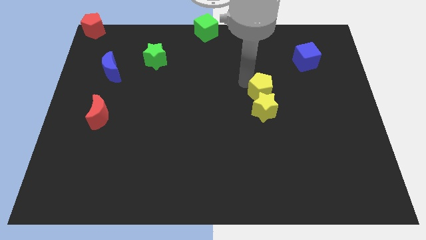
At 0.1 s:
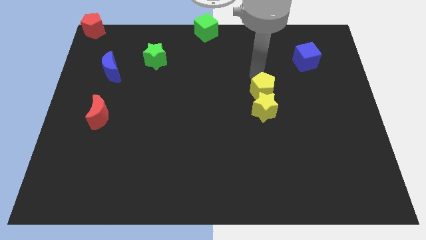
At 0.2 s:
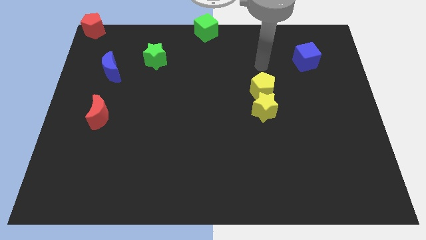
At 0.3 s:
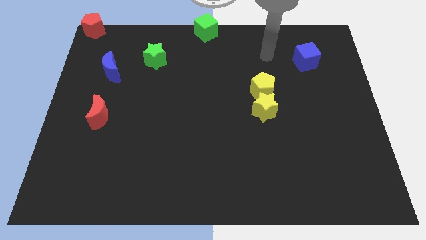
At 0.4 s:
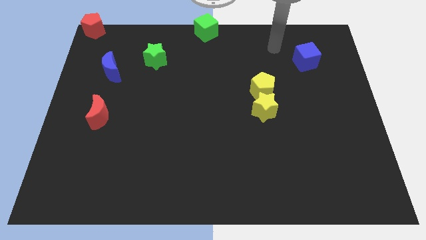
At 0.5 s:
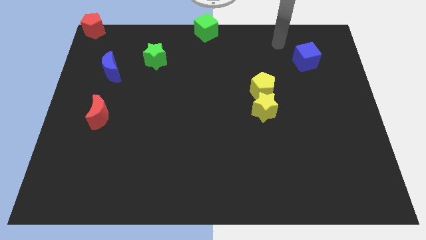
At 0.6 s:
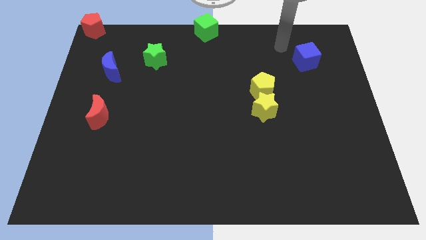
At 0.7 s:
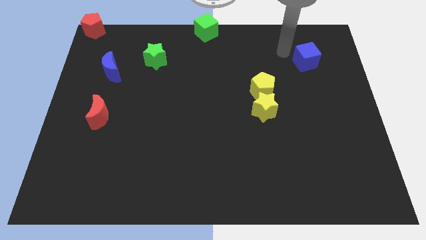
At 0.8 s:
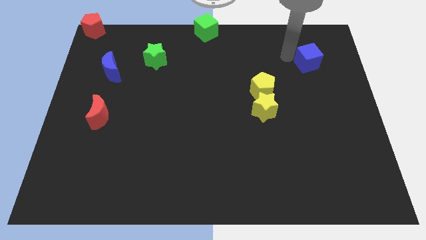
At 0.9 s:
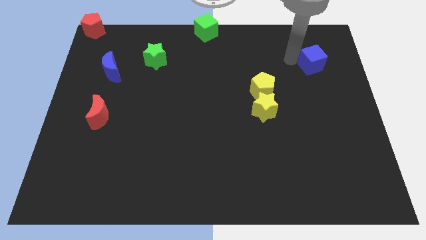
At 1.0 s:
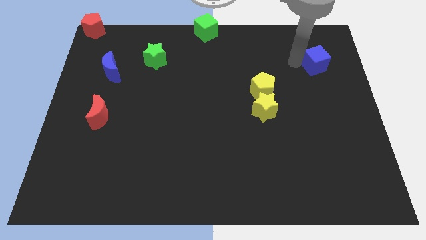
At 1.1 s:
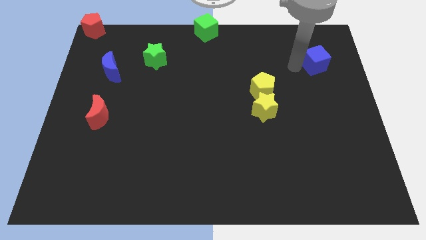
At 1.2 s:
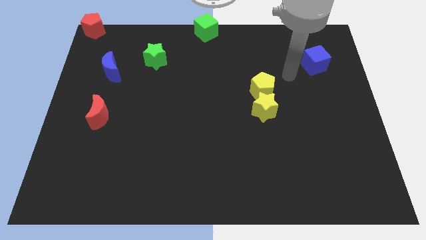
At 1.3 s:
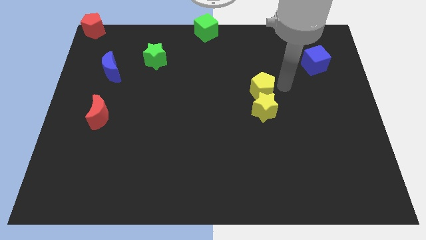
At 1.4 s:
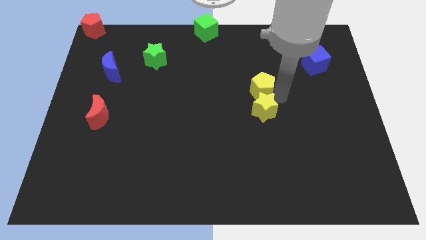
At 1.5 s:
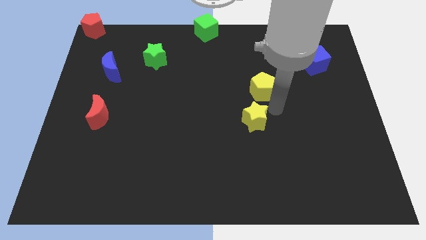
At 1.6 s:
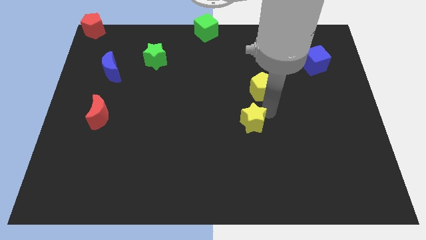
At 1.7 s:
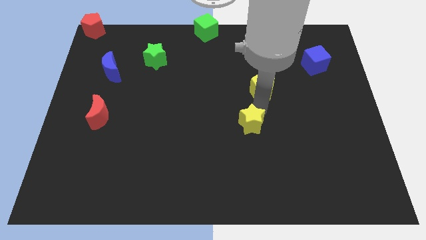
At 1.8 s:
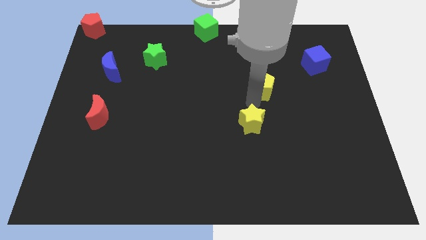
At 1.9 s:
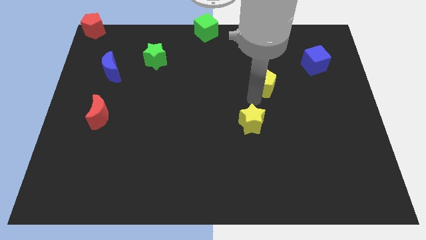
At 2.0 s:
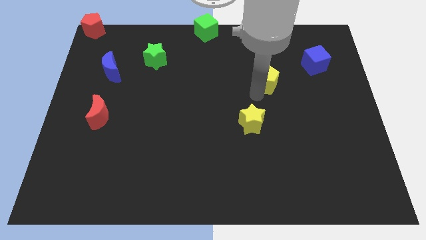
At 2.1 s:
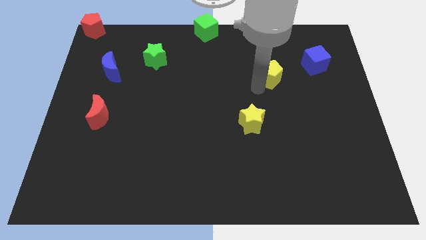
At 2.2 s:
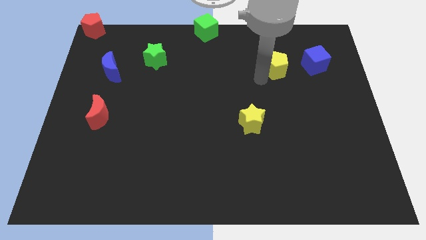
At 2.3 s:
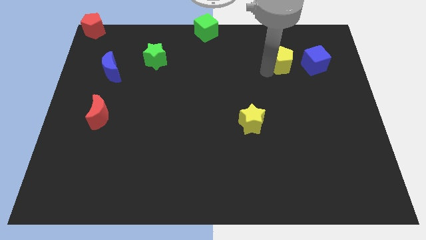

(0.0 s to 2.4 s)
separate the yellow pentagon and the yellow star

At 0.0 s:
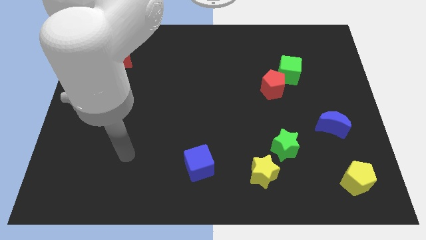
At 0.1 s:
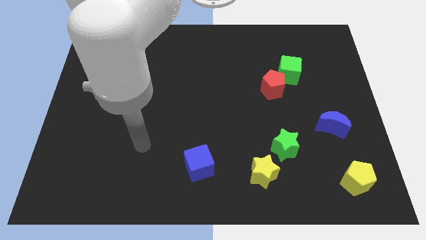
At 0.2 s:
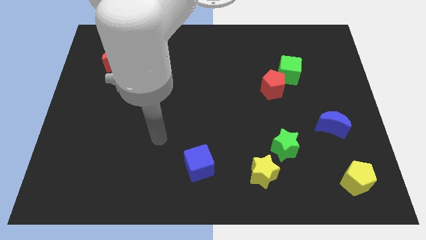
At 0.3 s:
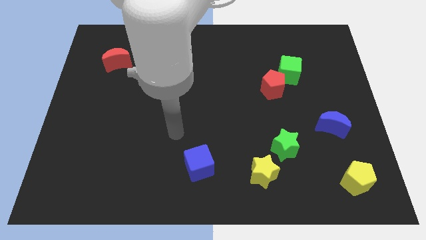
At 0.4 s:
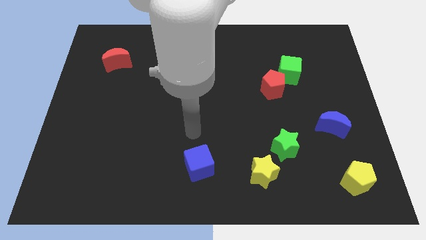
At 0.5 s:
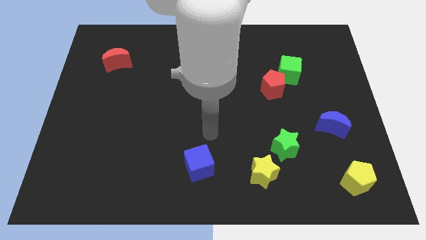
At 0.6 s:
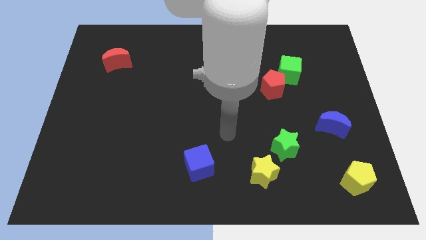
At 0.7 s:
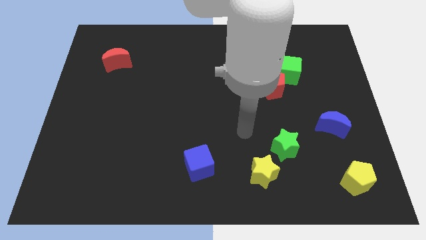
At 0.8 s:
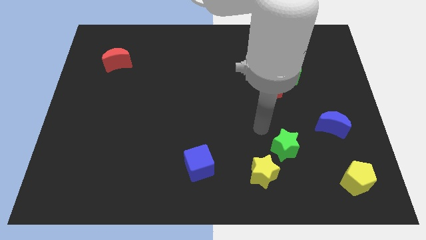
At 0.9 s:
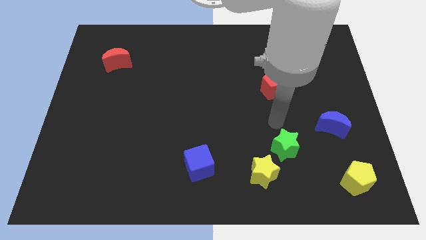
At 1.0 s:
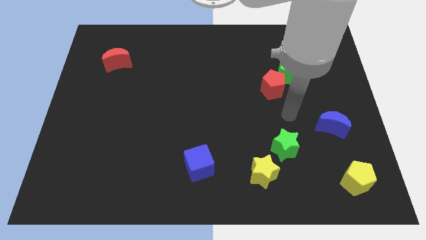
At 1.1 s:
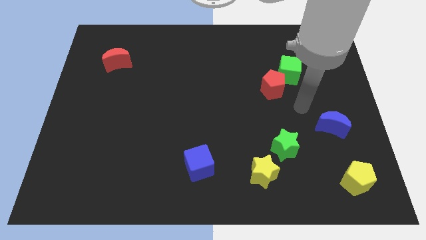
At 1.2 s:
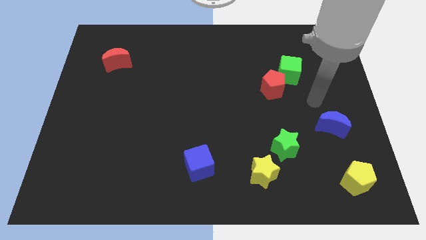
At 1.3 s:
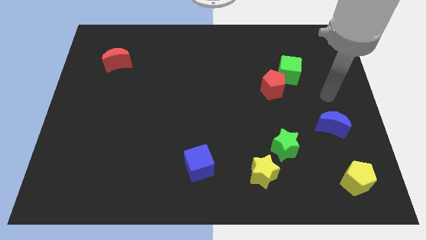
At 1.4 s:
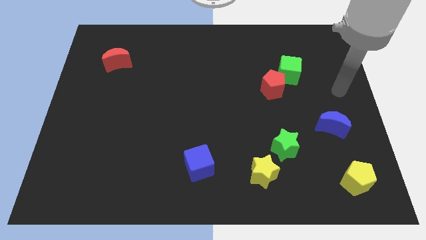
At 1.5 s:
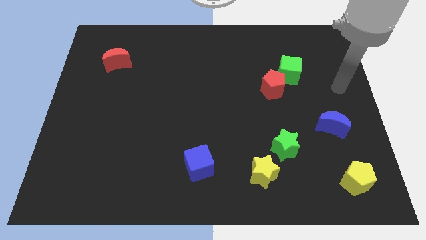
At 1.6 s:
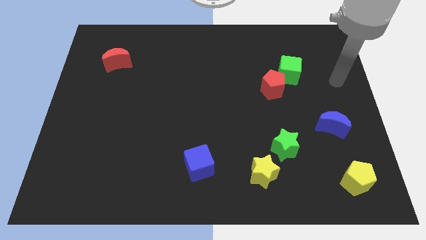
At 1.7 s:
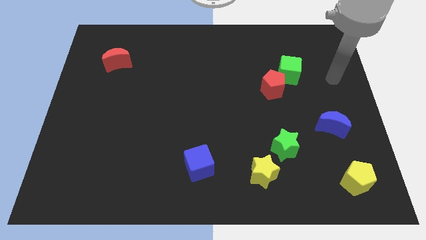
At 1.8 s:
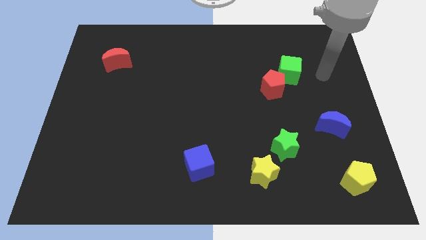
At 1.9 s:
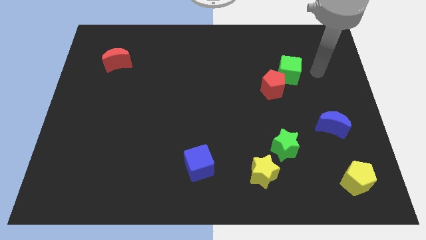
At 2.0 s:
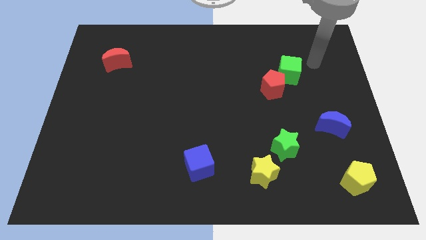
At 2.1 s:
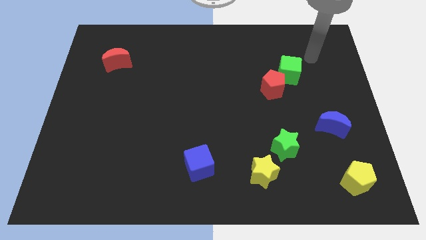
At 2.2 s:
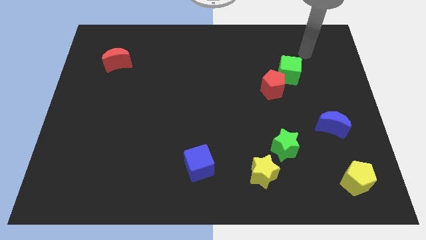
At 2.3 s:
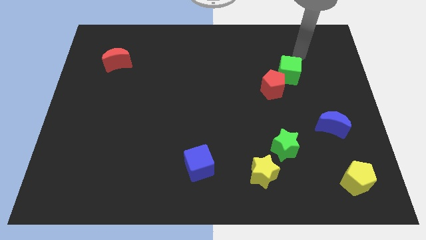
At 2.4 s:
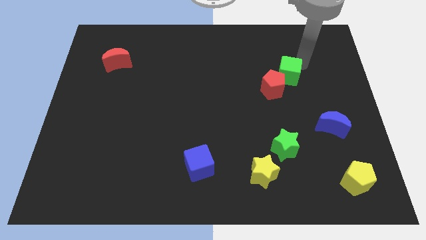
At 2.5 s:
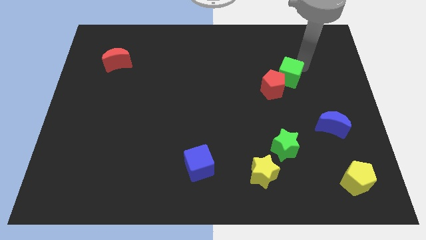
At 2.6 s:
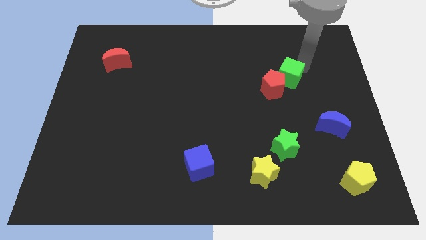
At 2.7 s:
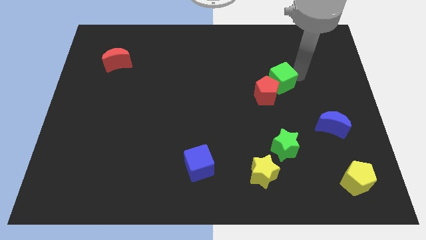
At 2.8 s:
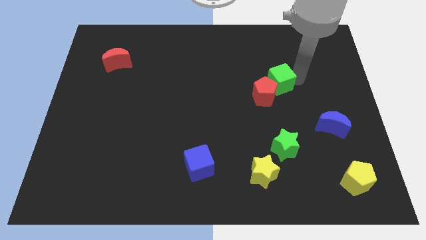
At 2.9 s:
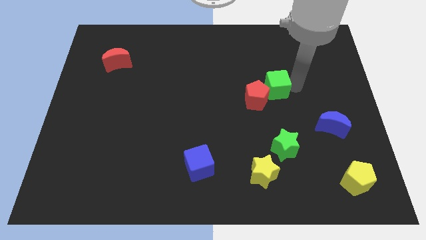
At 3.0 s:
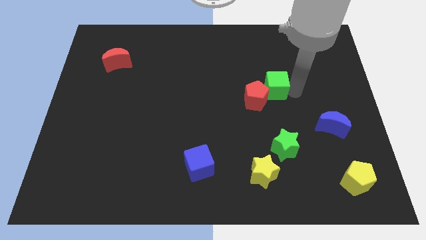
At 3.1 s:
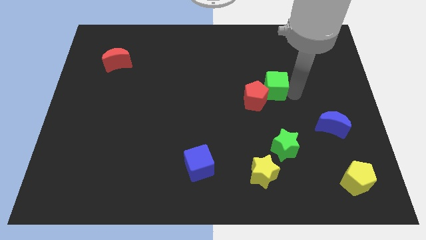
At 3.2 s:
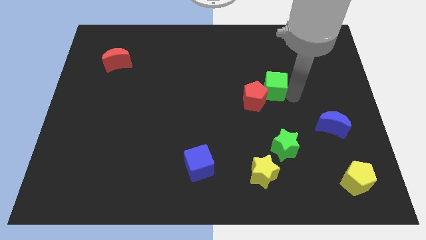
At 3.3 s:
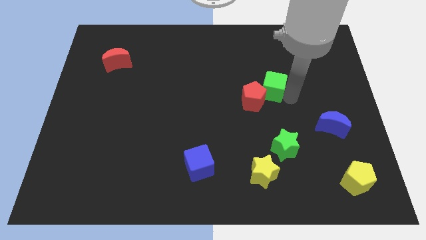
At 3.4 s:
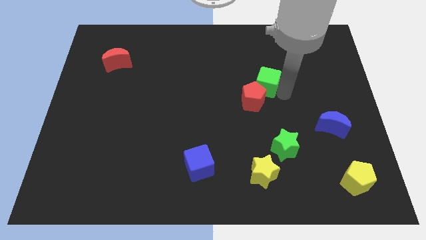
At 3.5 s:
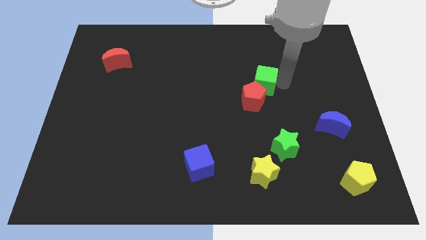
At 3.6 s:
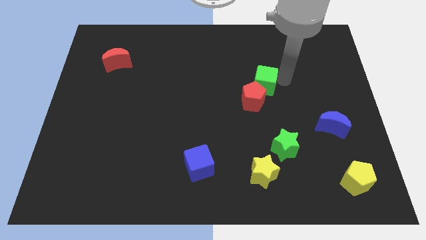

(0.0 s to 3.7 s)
push the green cube into the red pentagon

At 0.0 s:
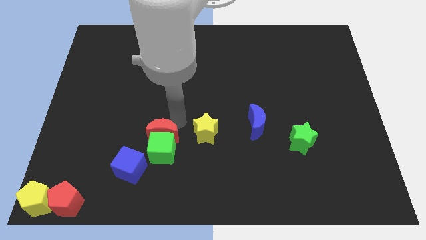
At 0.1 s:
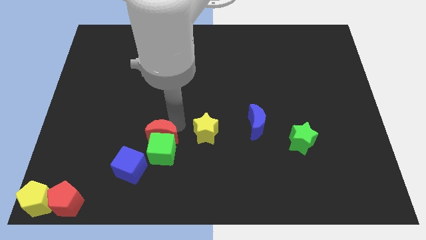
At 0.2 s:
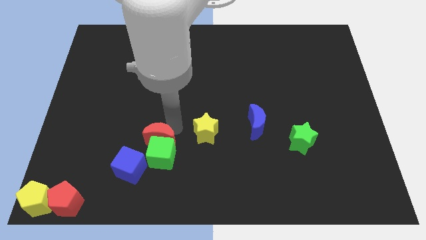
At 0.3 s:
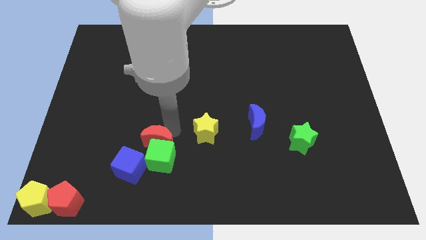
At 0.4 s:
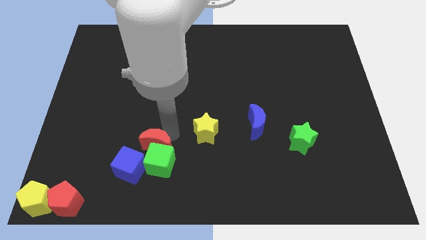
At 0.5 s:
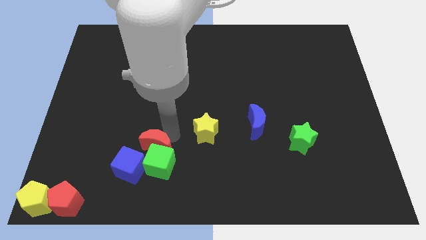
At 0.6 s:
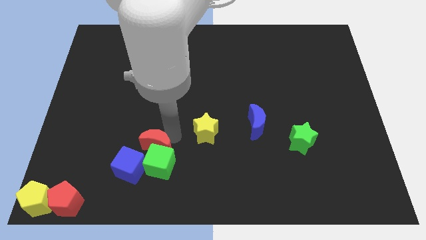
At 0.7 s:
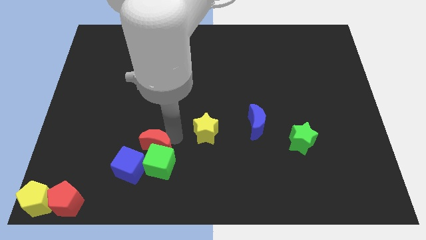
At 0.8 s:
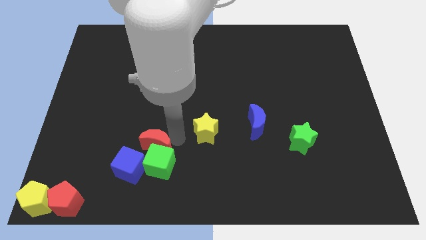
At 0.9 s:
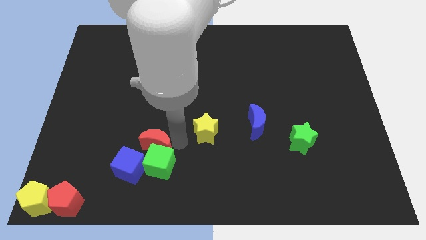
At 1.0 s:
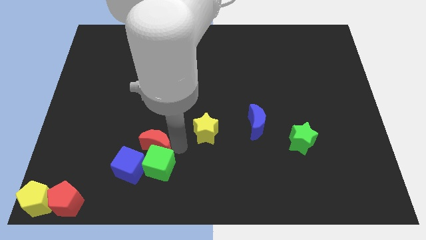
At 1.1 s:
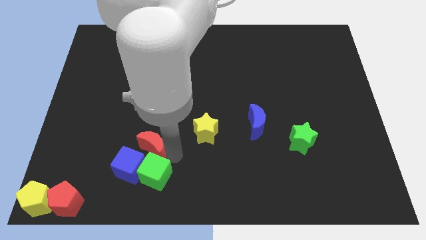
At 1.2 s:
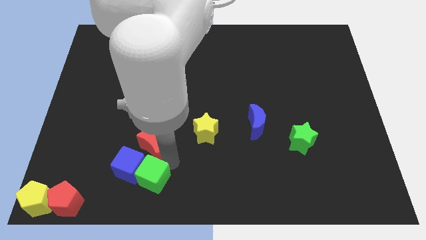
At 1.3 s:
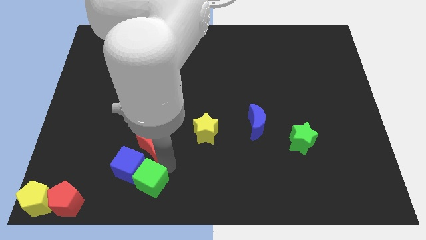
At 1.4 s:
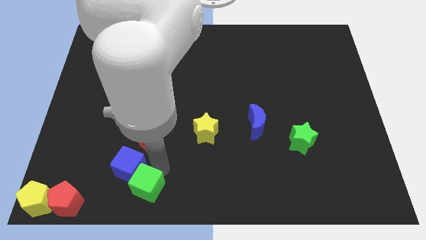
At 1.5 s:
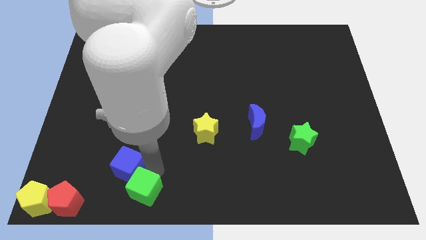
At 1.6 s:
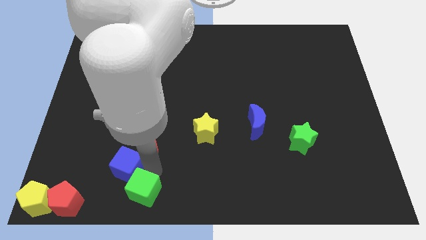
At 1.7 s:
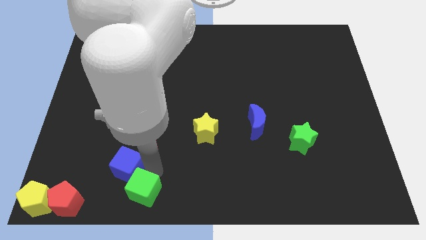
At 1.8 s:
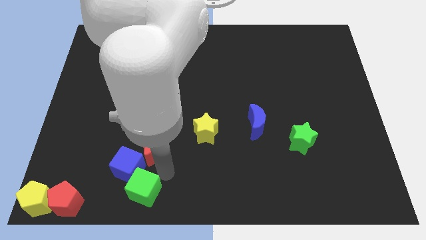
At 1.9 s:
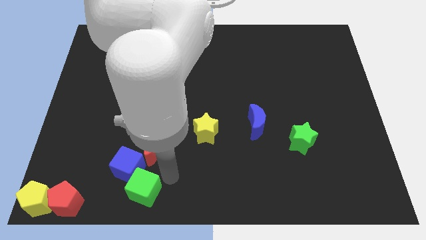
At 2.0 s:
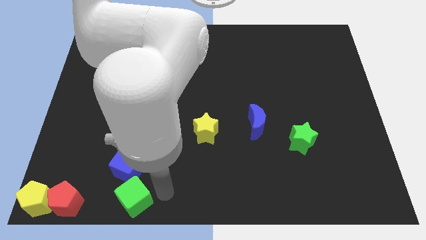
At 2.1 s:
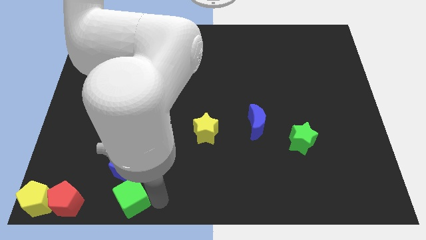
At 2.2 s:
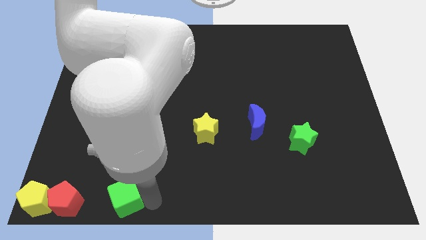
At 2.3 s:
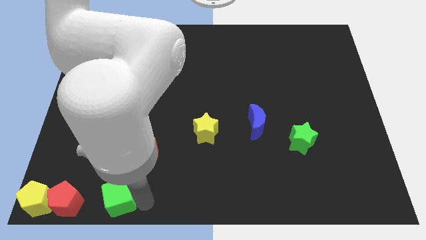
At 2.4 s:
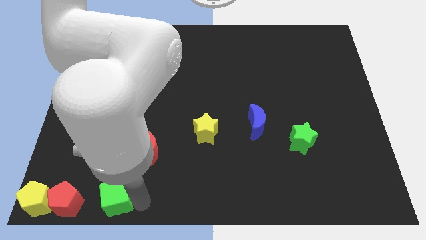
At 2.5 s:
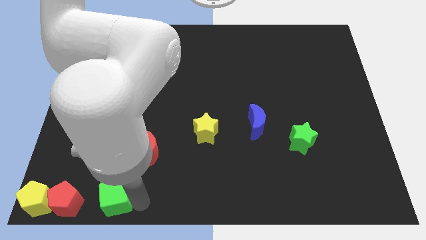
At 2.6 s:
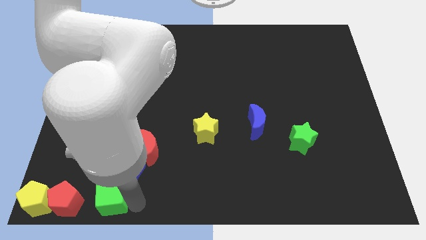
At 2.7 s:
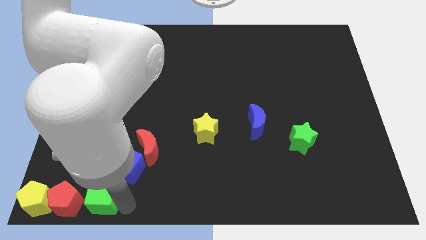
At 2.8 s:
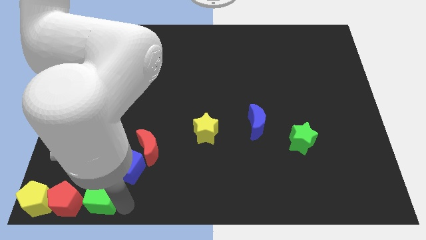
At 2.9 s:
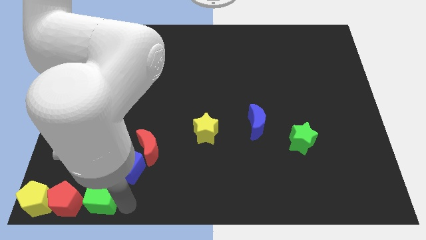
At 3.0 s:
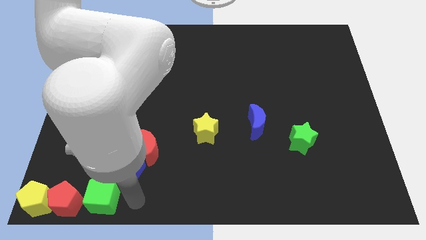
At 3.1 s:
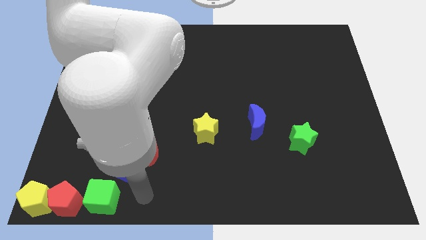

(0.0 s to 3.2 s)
place the green cube beside the red pentagon
